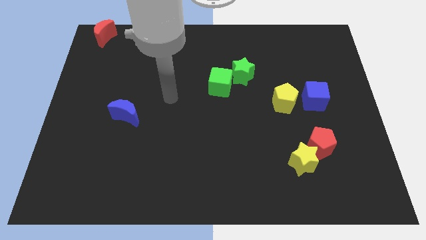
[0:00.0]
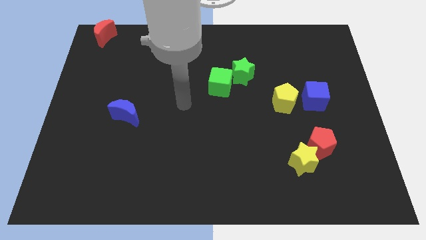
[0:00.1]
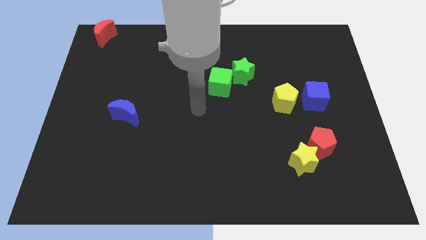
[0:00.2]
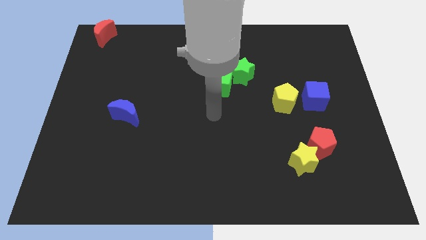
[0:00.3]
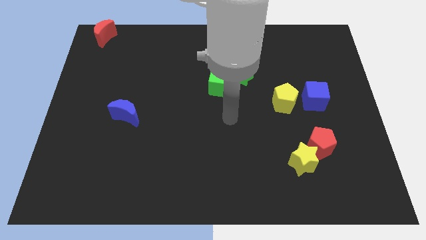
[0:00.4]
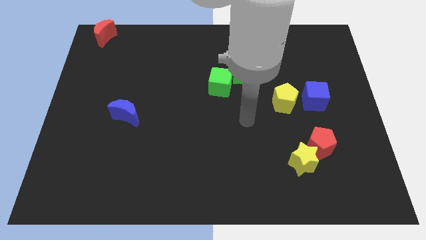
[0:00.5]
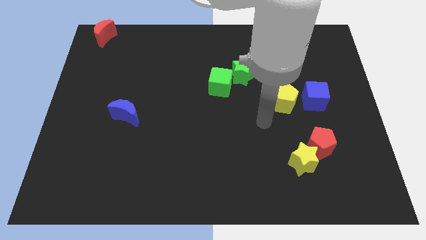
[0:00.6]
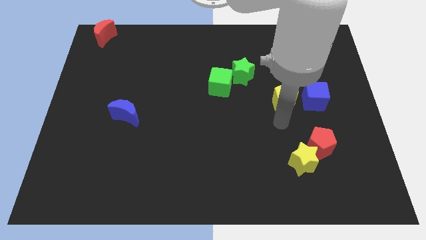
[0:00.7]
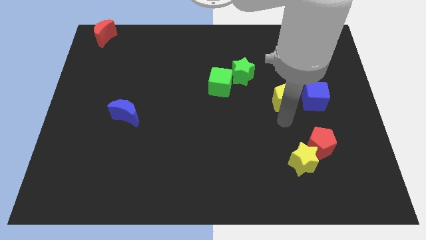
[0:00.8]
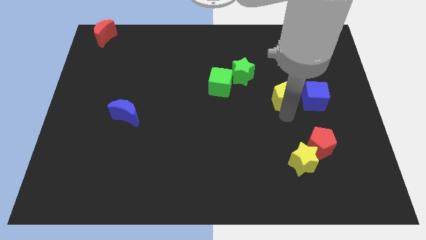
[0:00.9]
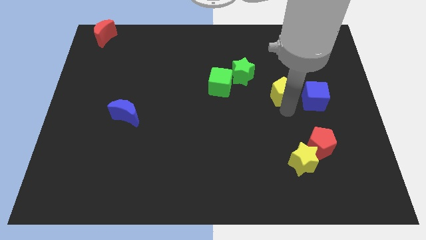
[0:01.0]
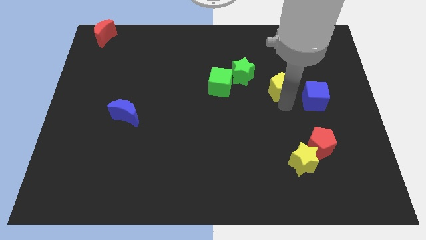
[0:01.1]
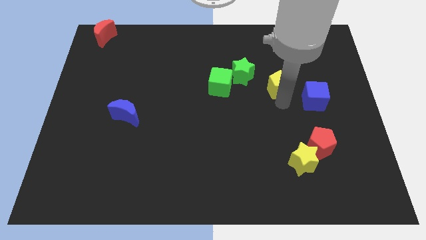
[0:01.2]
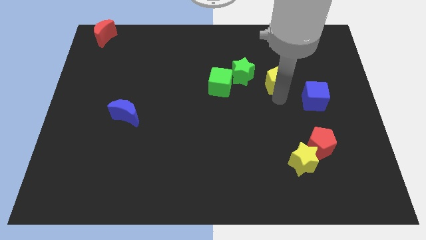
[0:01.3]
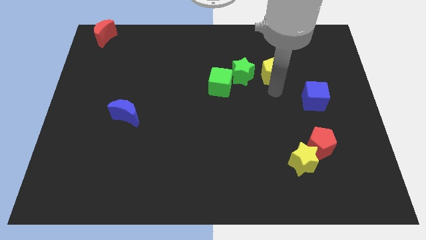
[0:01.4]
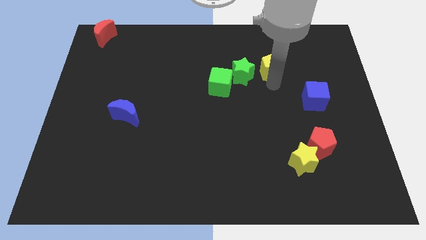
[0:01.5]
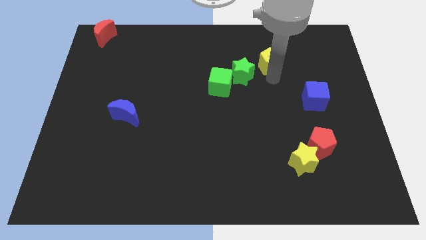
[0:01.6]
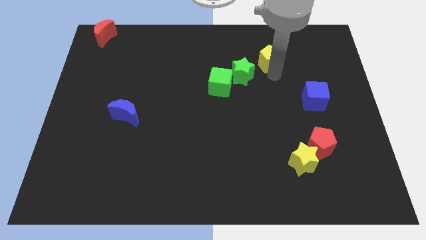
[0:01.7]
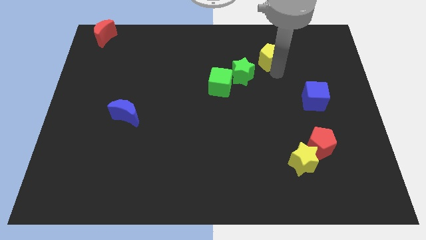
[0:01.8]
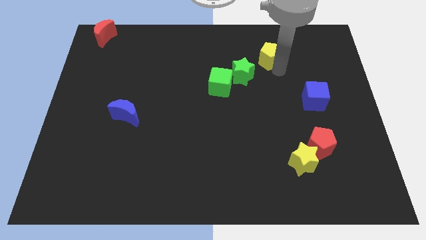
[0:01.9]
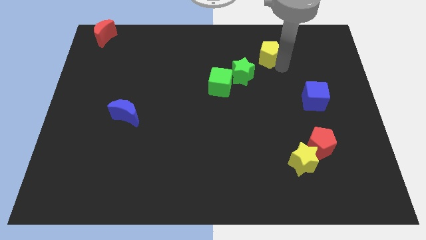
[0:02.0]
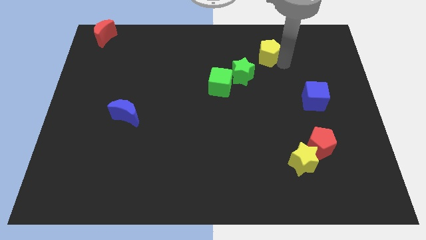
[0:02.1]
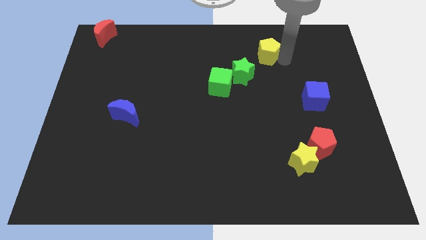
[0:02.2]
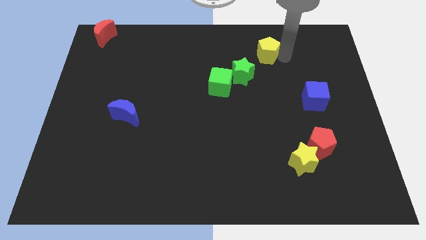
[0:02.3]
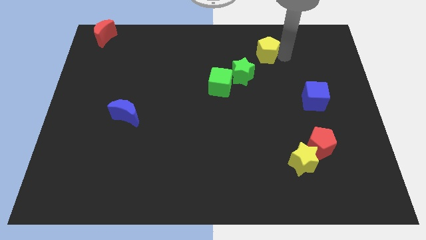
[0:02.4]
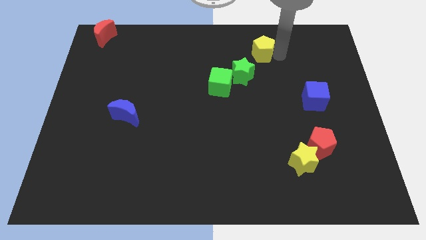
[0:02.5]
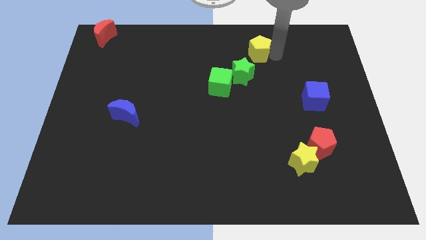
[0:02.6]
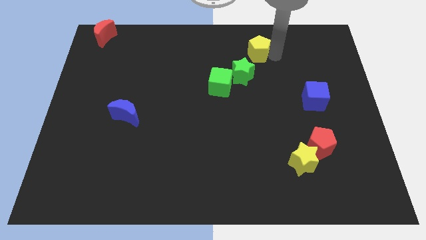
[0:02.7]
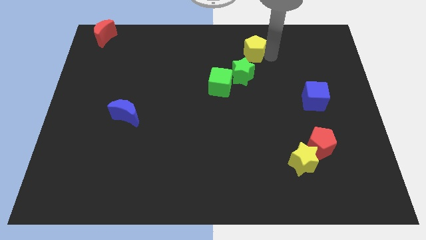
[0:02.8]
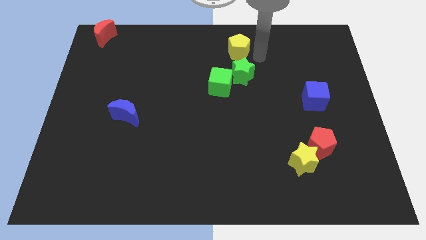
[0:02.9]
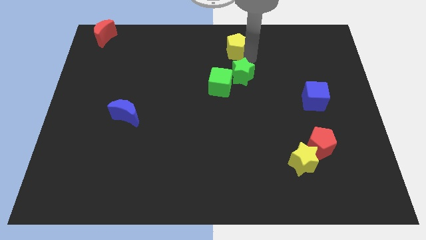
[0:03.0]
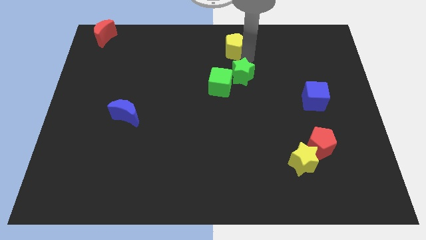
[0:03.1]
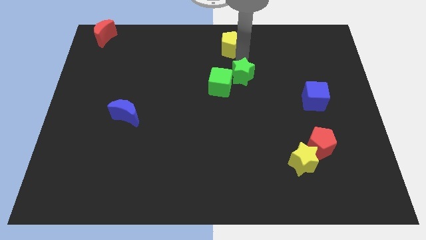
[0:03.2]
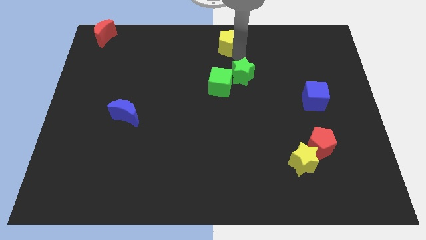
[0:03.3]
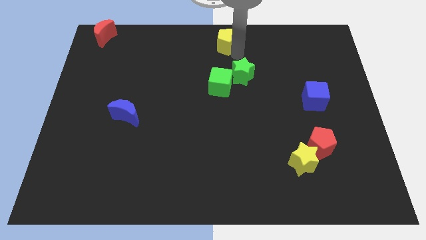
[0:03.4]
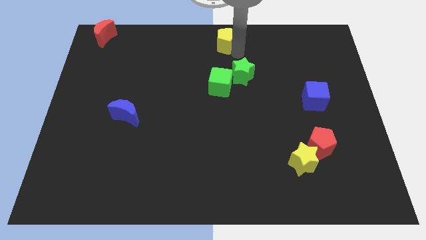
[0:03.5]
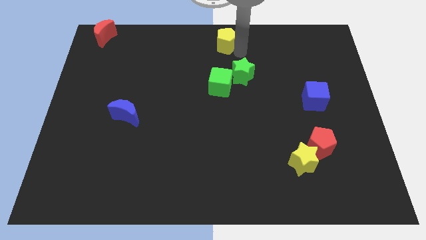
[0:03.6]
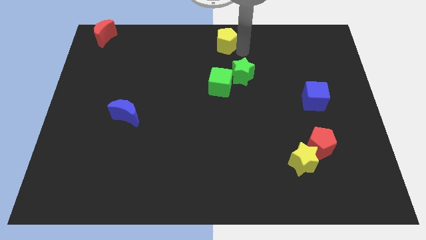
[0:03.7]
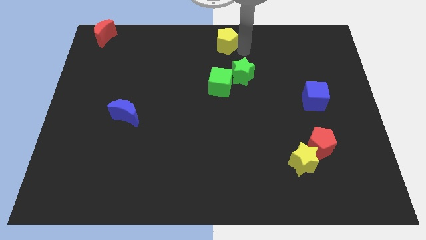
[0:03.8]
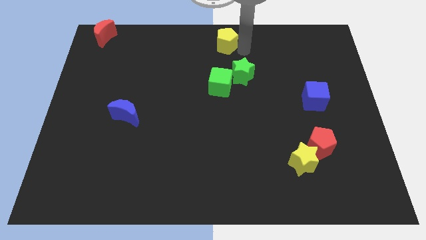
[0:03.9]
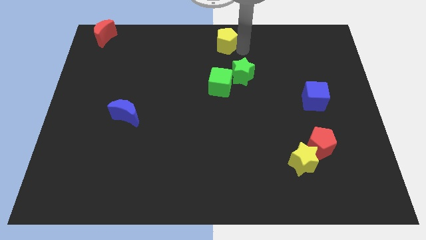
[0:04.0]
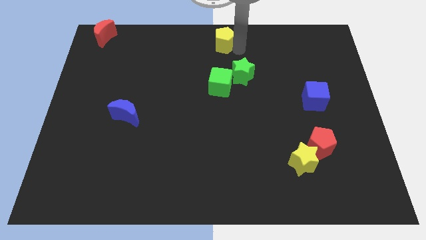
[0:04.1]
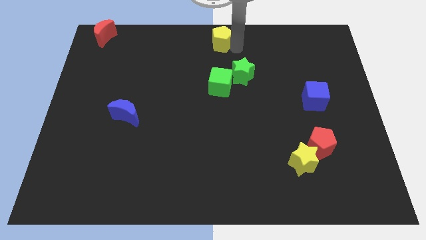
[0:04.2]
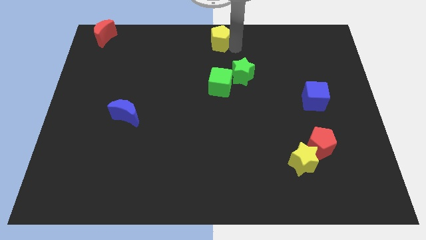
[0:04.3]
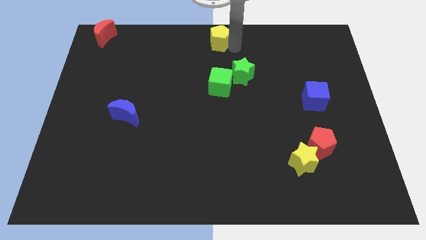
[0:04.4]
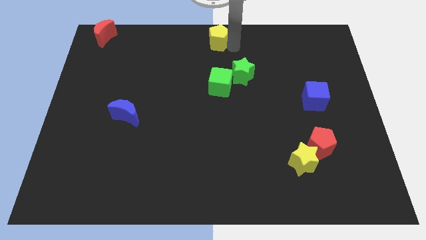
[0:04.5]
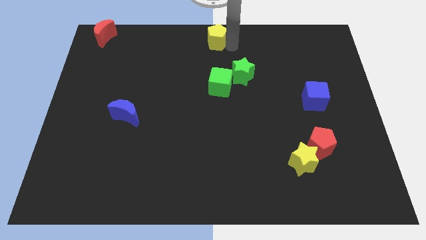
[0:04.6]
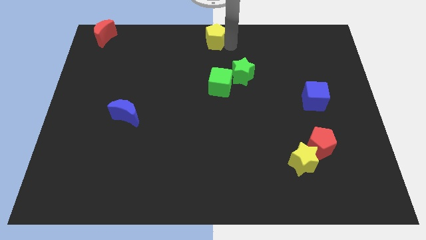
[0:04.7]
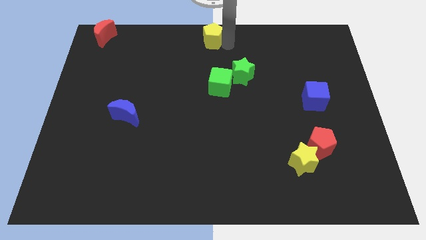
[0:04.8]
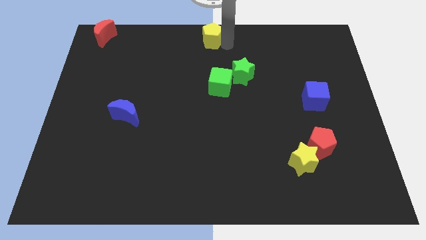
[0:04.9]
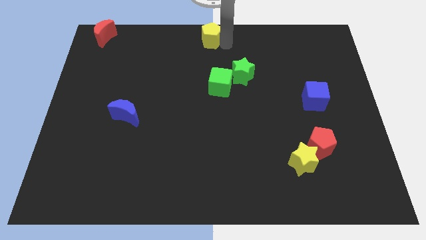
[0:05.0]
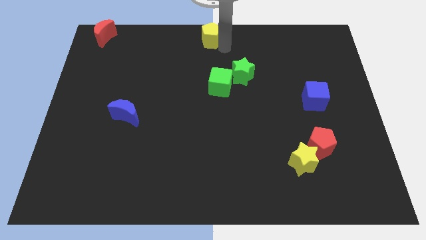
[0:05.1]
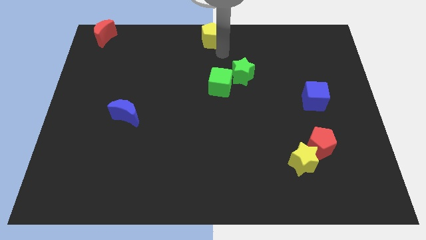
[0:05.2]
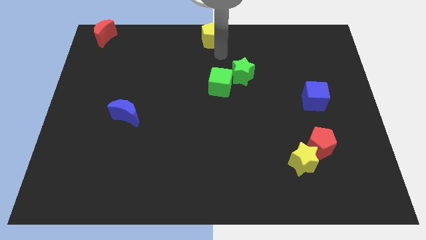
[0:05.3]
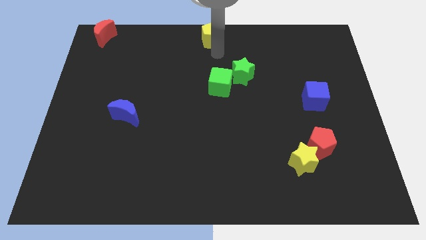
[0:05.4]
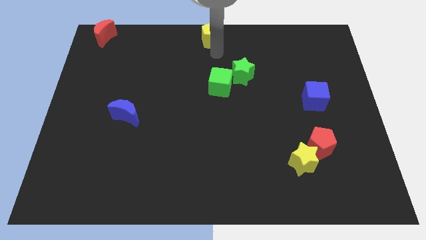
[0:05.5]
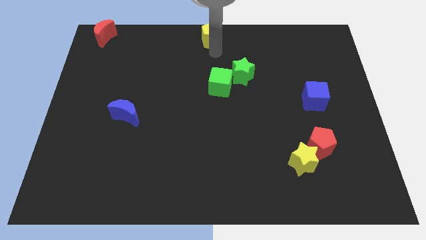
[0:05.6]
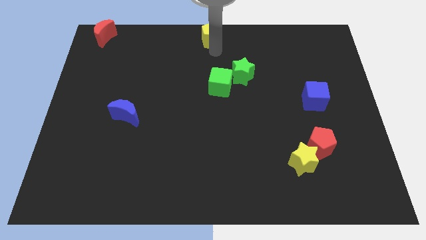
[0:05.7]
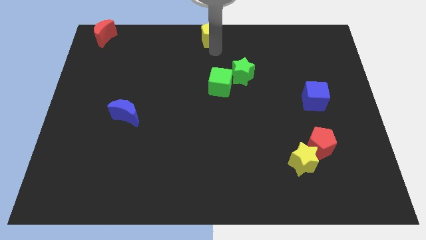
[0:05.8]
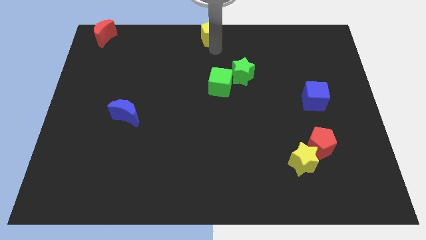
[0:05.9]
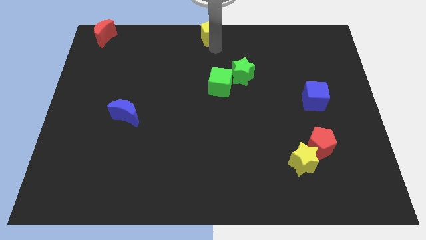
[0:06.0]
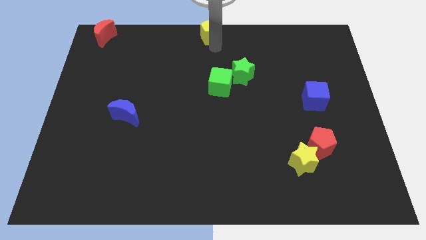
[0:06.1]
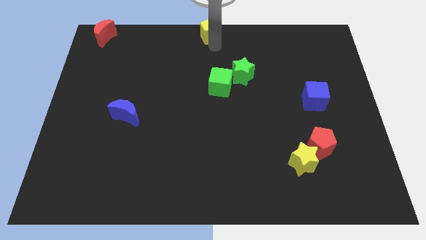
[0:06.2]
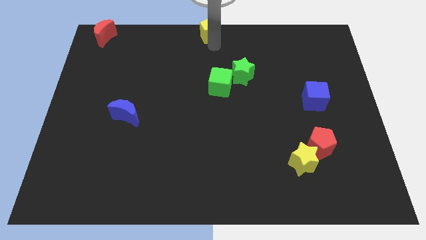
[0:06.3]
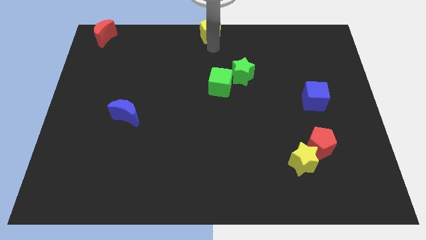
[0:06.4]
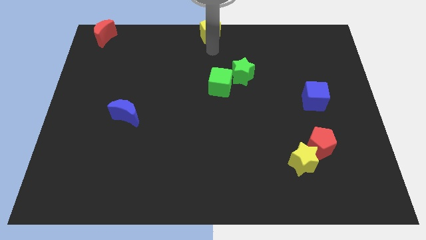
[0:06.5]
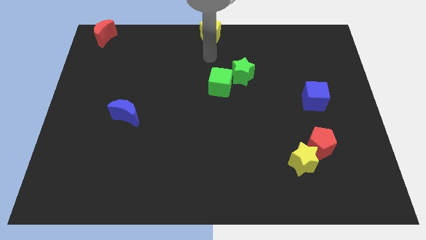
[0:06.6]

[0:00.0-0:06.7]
place the yellow pentagon to the top center of the board

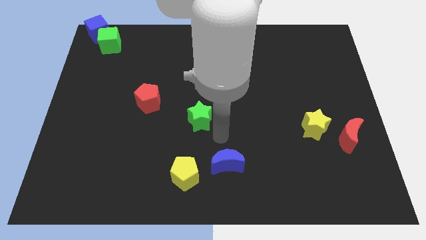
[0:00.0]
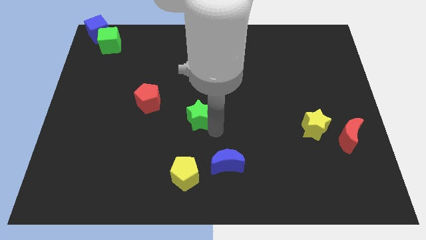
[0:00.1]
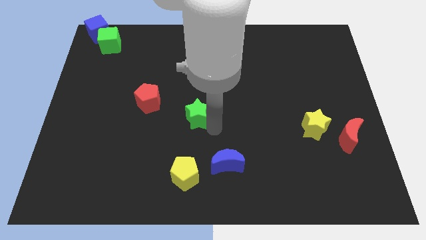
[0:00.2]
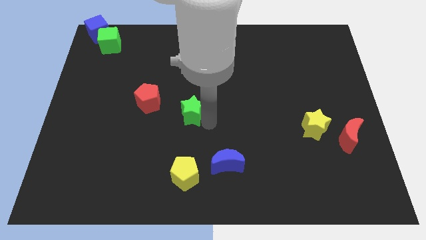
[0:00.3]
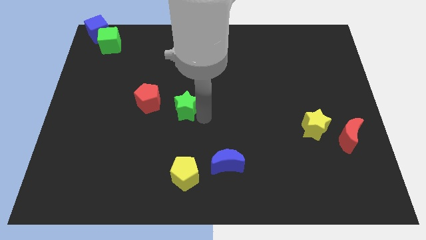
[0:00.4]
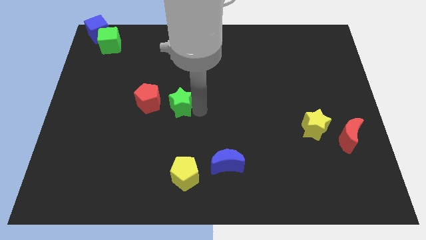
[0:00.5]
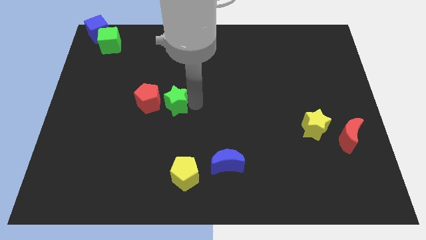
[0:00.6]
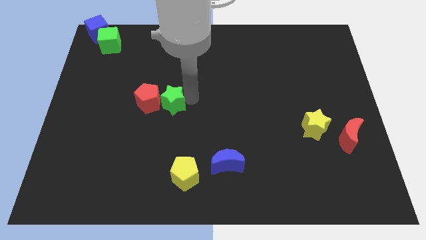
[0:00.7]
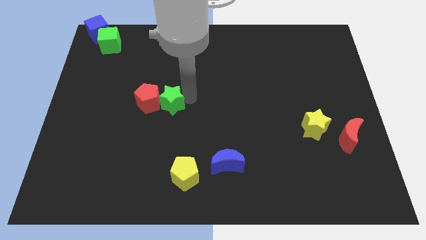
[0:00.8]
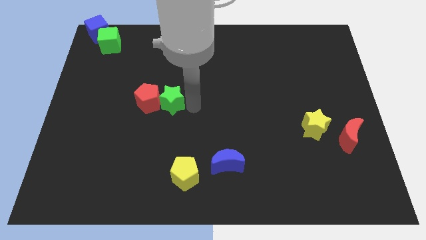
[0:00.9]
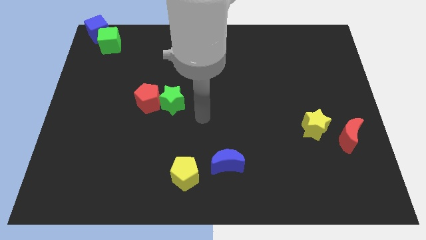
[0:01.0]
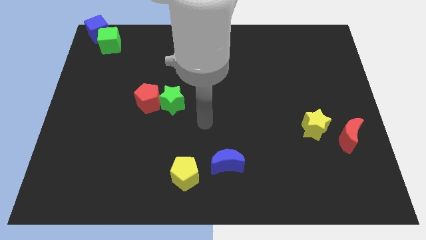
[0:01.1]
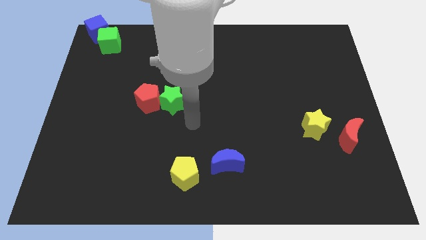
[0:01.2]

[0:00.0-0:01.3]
move the green star into the red pentagon

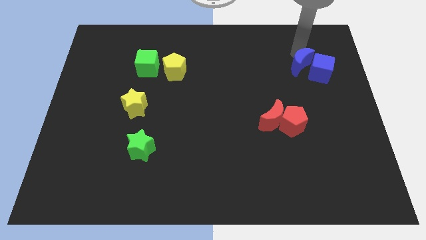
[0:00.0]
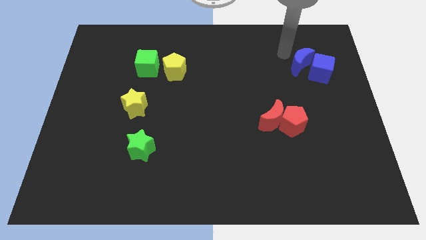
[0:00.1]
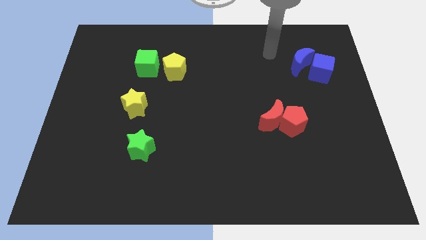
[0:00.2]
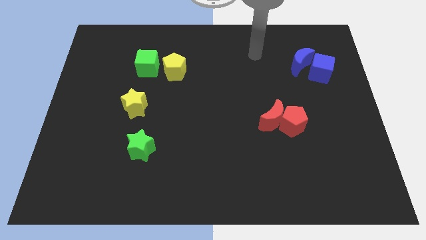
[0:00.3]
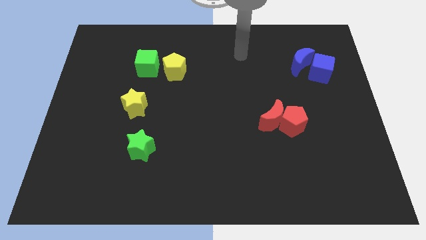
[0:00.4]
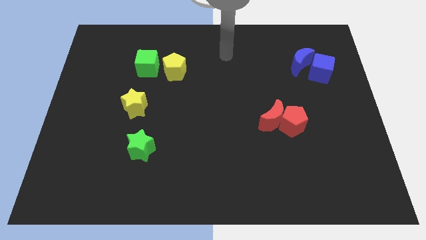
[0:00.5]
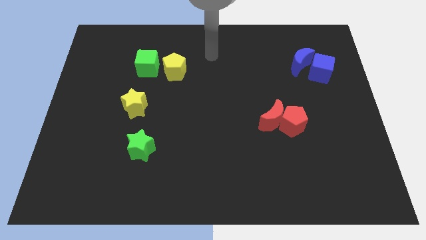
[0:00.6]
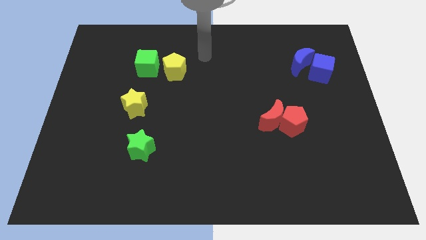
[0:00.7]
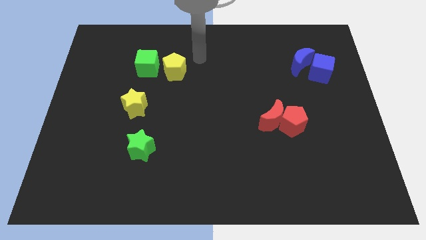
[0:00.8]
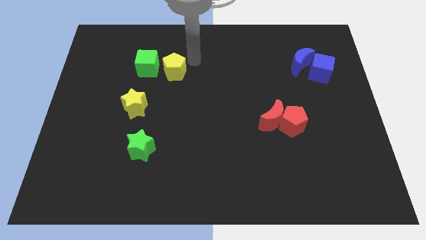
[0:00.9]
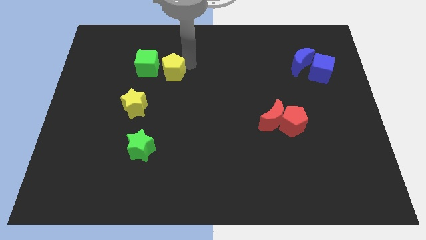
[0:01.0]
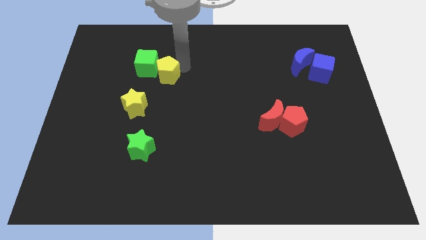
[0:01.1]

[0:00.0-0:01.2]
move your hand towards the yellow pentagon
